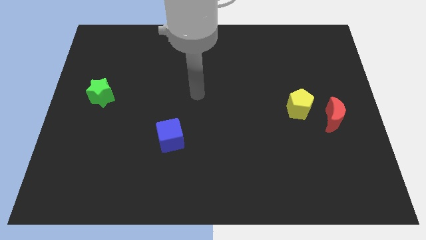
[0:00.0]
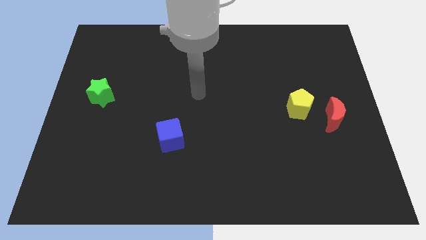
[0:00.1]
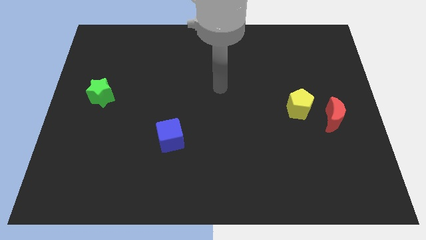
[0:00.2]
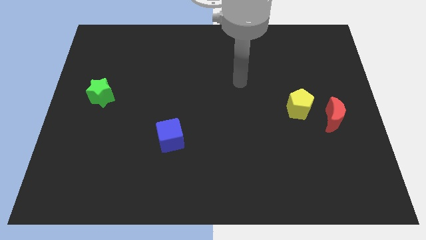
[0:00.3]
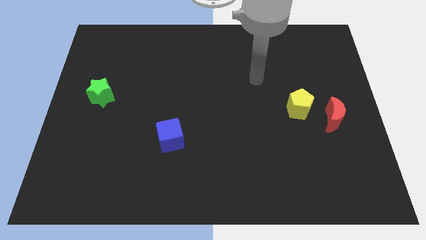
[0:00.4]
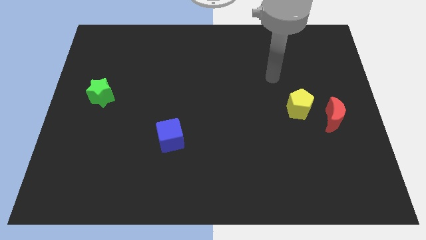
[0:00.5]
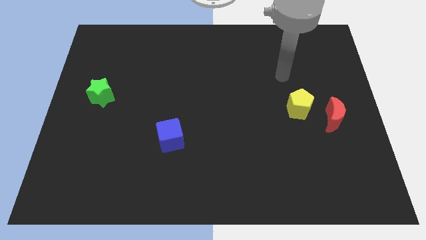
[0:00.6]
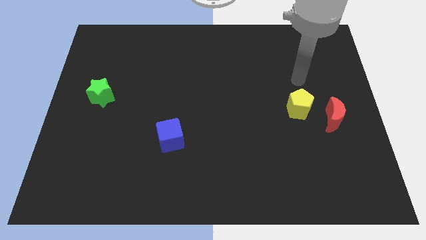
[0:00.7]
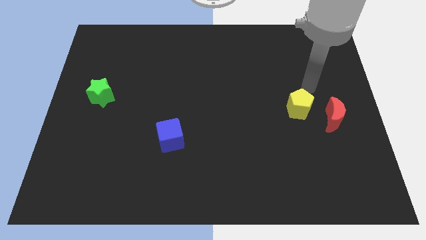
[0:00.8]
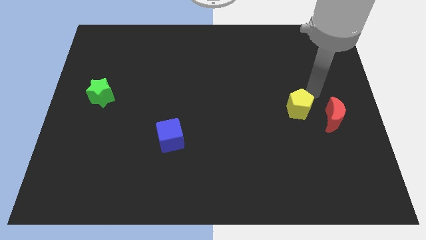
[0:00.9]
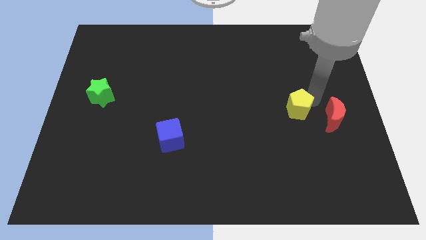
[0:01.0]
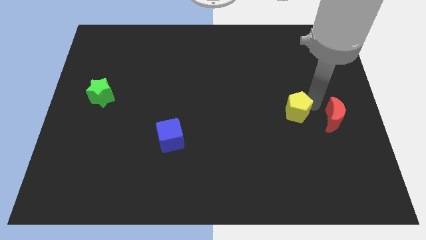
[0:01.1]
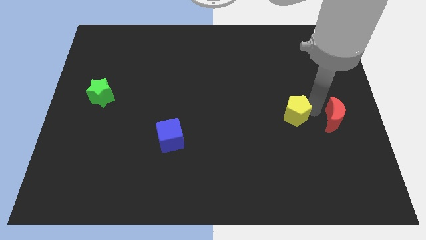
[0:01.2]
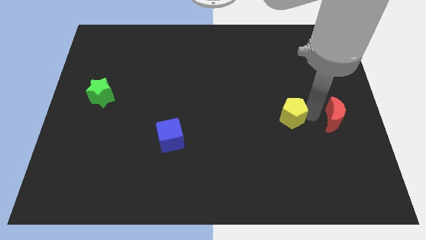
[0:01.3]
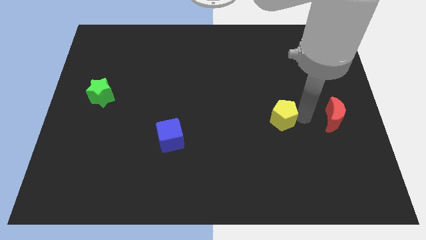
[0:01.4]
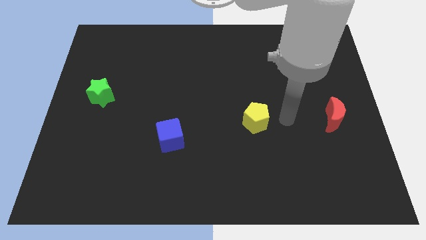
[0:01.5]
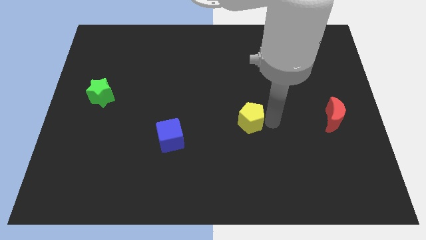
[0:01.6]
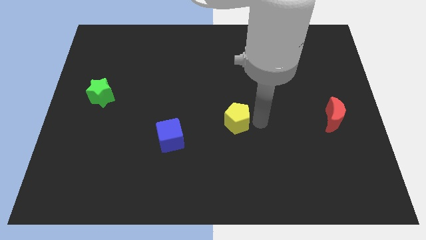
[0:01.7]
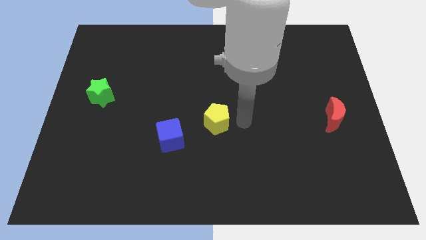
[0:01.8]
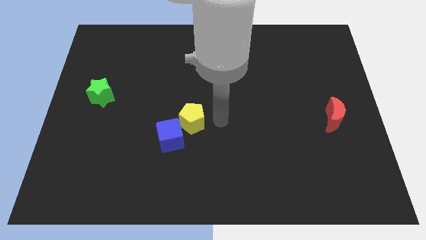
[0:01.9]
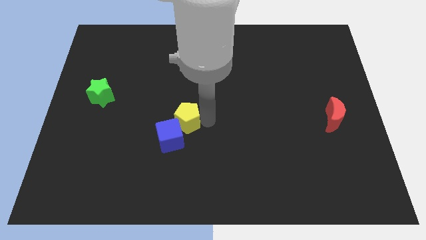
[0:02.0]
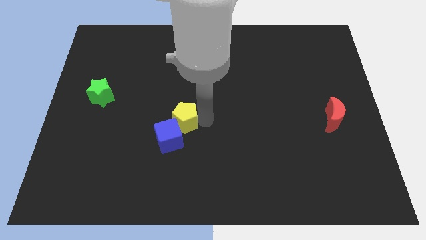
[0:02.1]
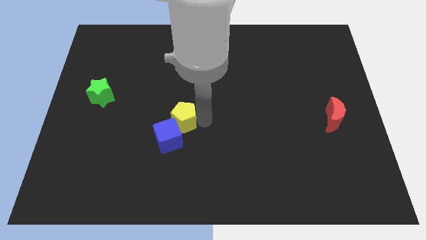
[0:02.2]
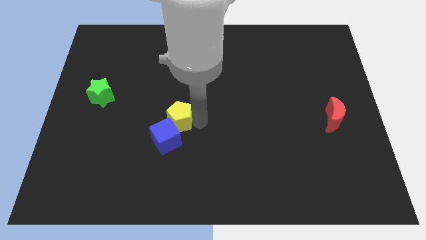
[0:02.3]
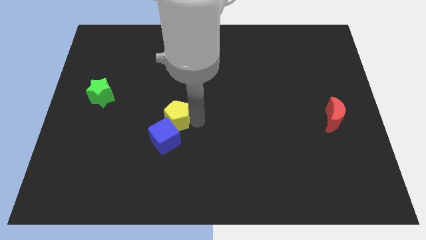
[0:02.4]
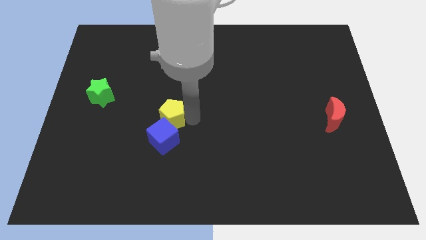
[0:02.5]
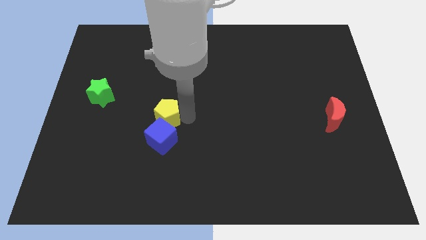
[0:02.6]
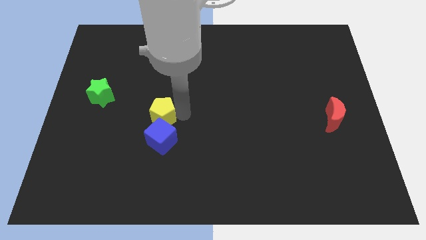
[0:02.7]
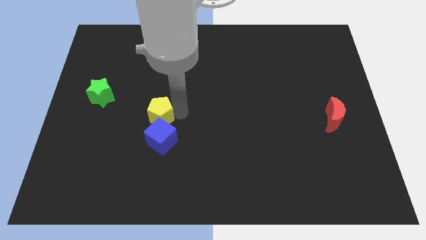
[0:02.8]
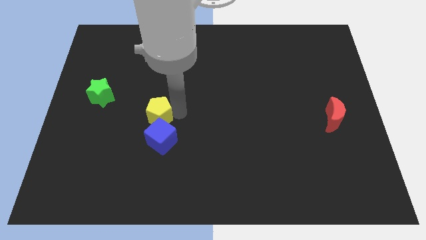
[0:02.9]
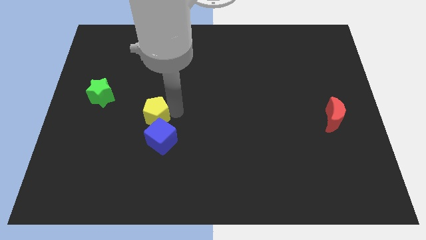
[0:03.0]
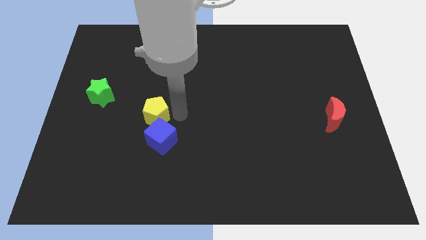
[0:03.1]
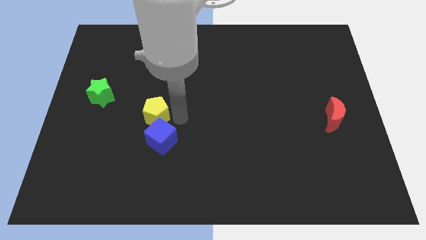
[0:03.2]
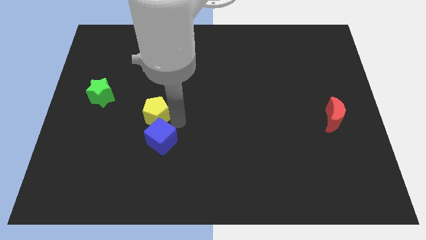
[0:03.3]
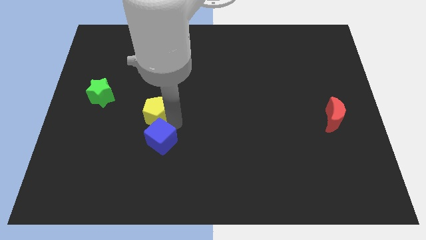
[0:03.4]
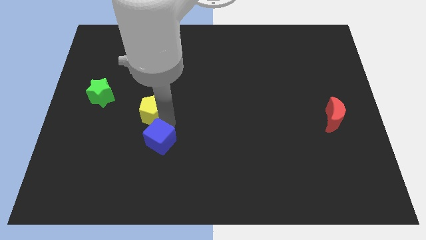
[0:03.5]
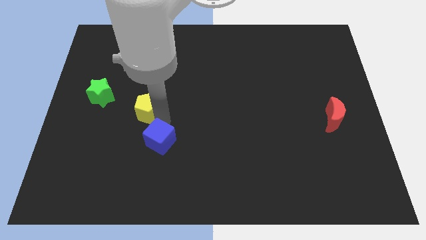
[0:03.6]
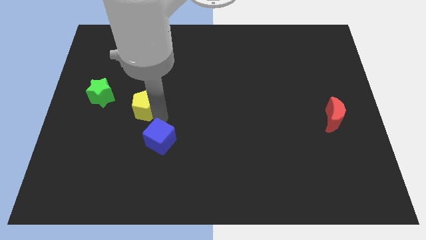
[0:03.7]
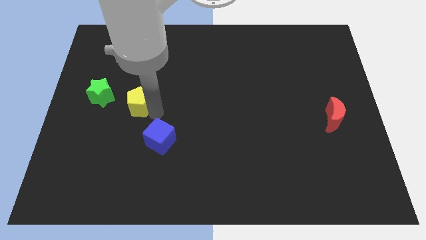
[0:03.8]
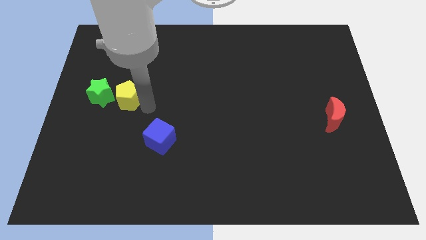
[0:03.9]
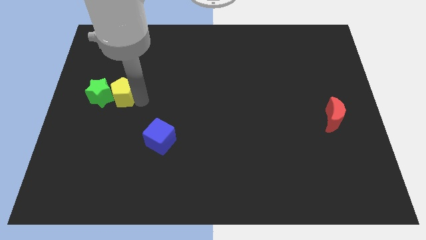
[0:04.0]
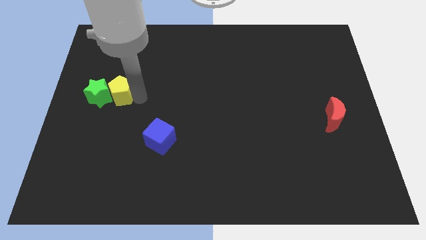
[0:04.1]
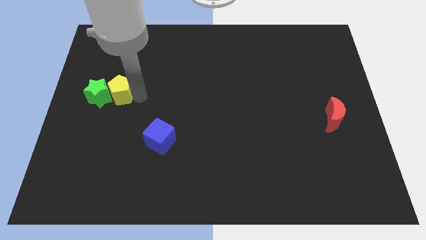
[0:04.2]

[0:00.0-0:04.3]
slide the pentagon next to the star

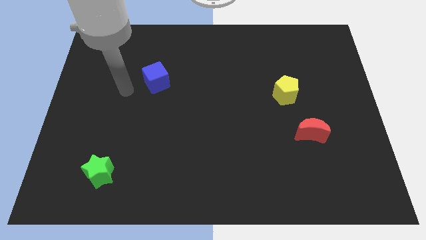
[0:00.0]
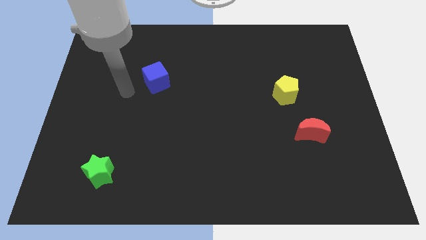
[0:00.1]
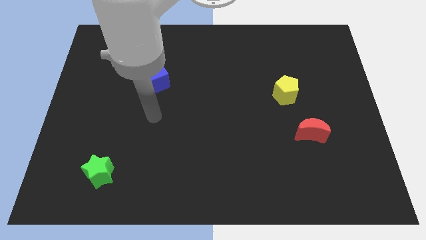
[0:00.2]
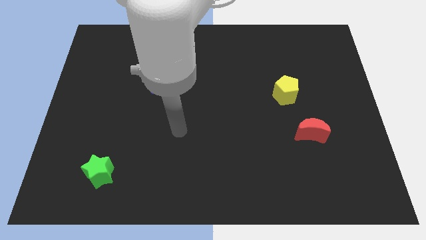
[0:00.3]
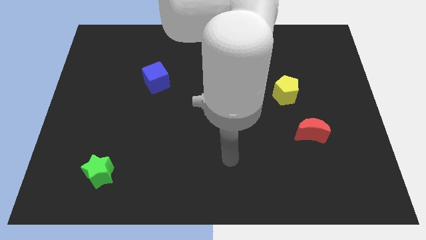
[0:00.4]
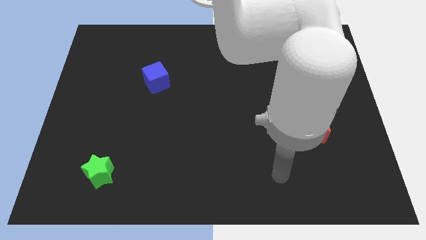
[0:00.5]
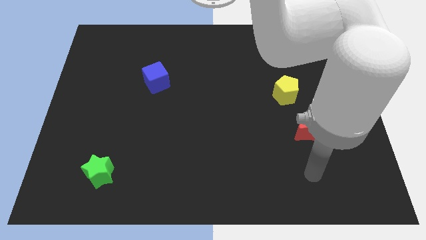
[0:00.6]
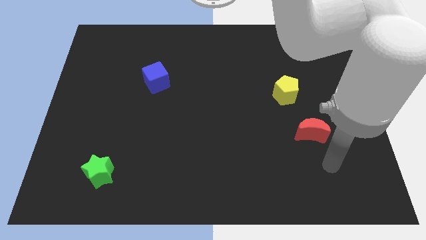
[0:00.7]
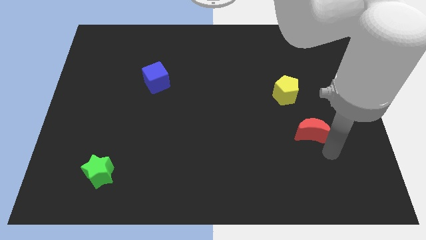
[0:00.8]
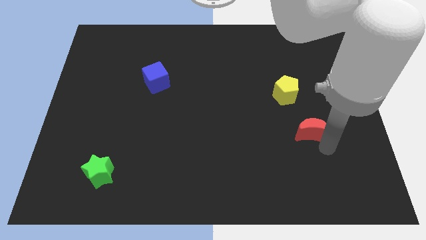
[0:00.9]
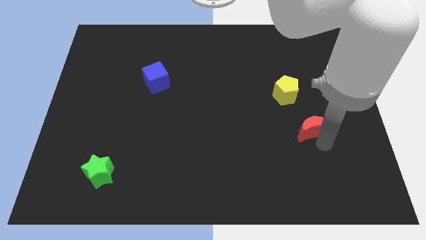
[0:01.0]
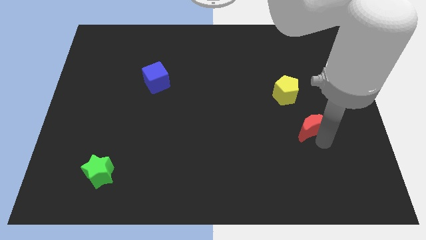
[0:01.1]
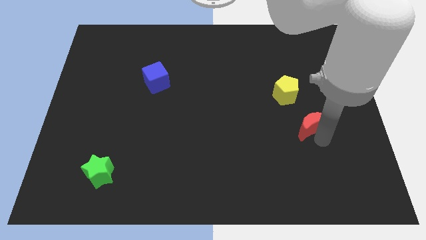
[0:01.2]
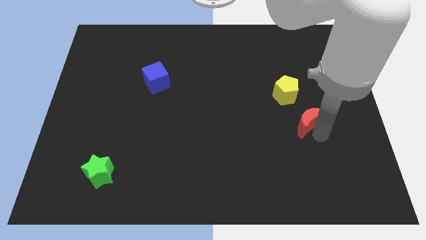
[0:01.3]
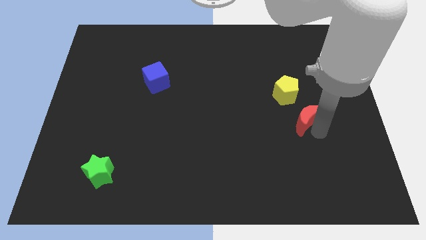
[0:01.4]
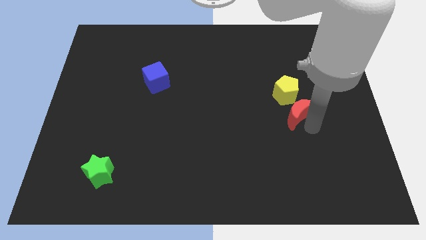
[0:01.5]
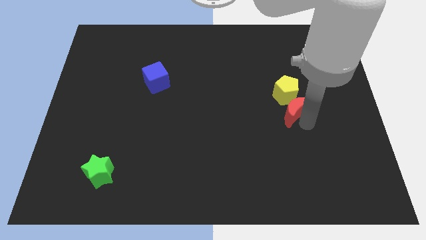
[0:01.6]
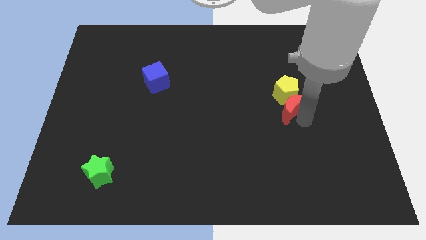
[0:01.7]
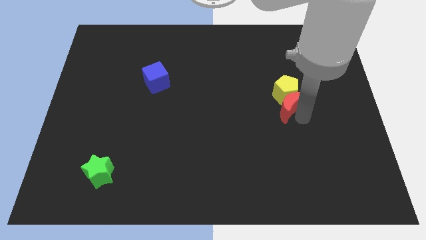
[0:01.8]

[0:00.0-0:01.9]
move the red block next to the yellow pentagon

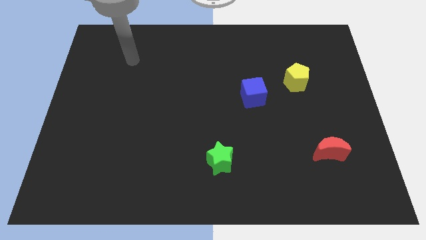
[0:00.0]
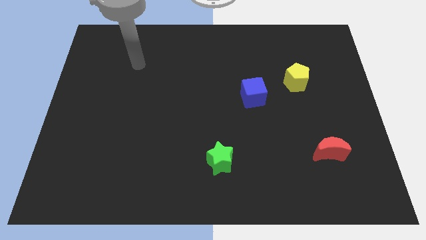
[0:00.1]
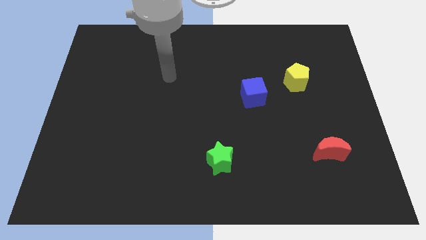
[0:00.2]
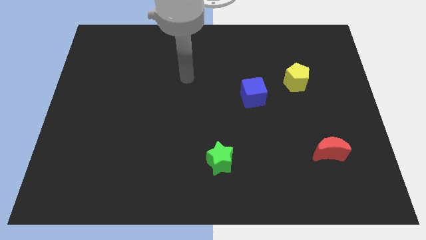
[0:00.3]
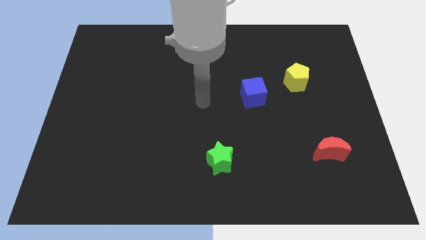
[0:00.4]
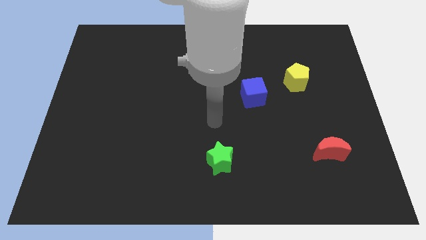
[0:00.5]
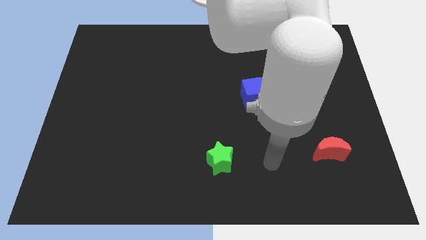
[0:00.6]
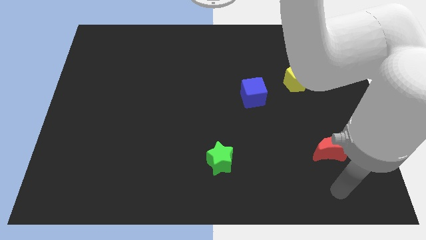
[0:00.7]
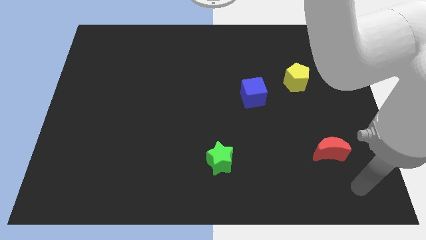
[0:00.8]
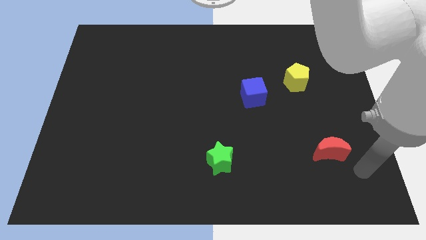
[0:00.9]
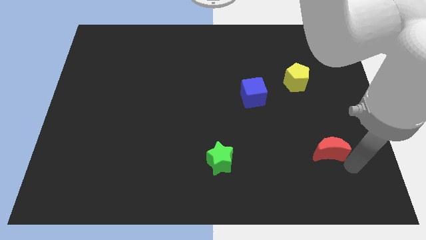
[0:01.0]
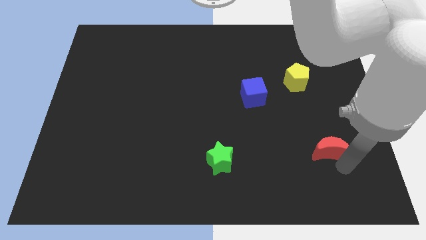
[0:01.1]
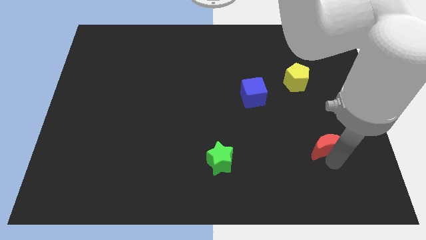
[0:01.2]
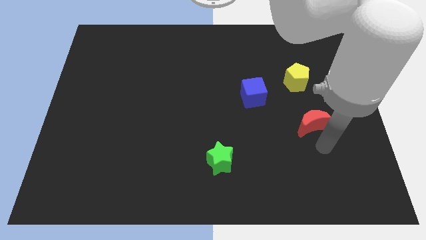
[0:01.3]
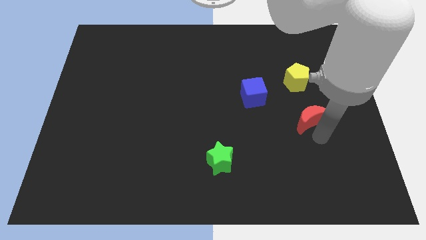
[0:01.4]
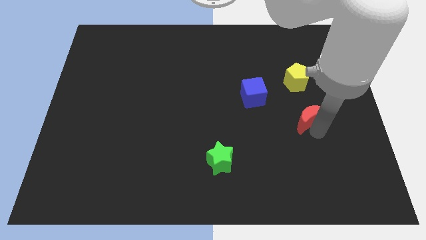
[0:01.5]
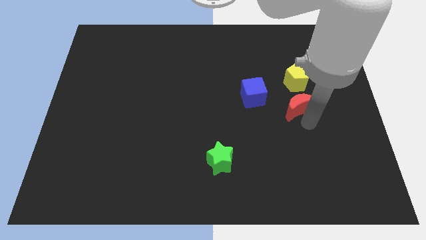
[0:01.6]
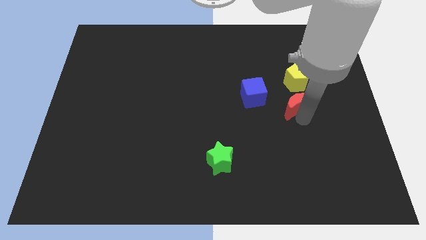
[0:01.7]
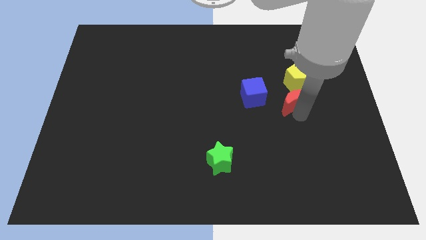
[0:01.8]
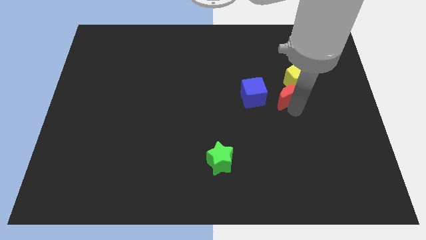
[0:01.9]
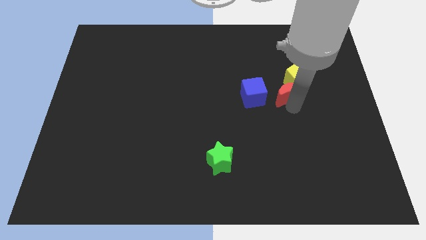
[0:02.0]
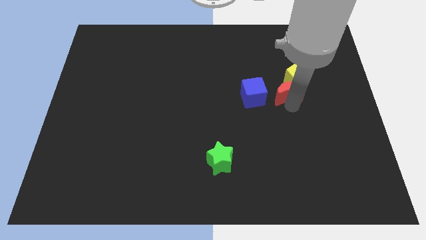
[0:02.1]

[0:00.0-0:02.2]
push the moon to the yellow pentagon

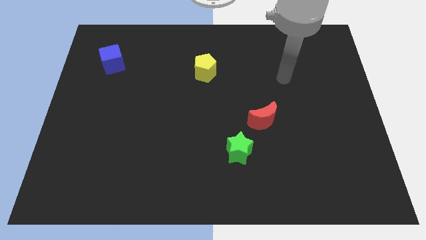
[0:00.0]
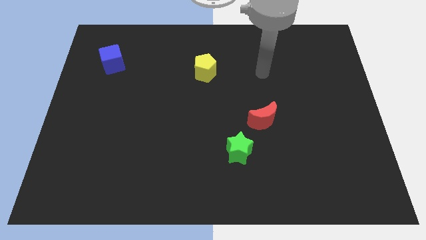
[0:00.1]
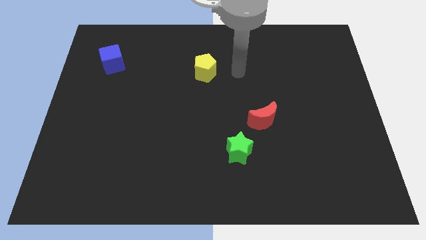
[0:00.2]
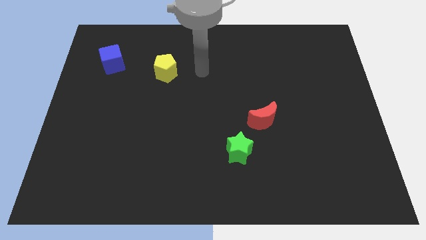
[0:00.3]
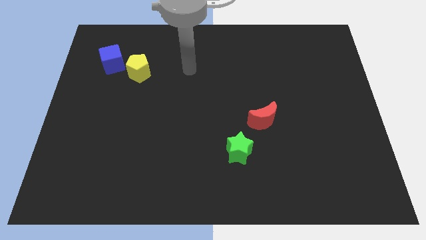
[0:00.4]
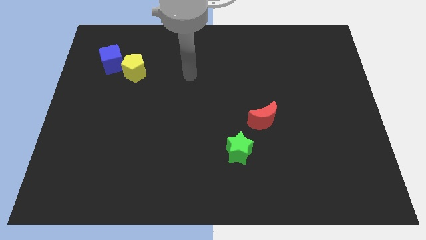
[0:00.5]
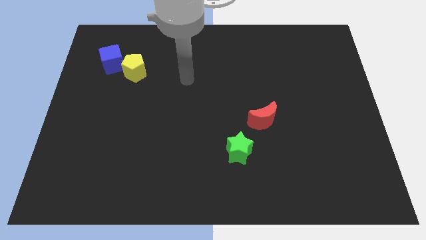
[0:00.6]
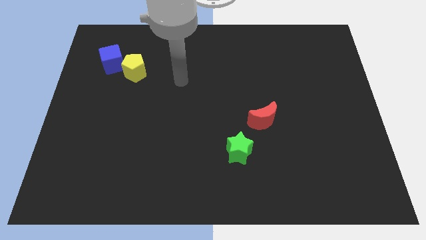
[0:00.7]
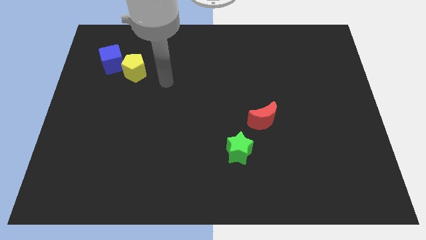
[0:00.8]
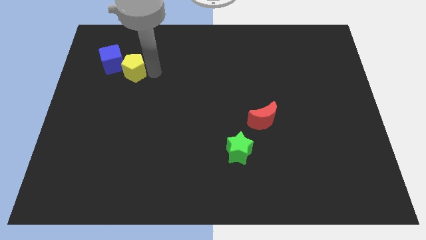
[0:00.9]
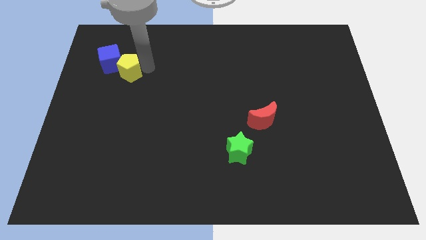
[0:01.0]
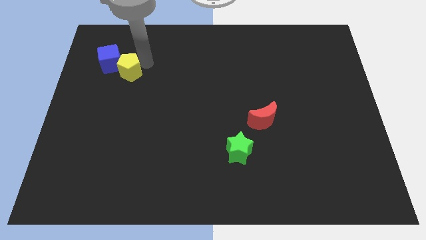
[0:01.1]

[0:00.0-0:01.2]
push the pentagon next to the blue block
